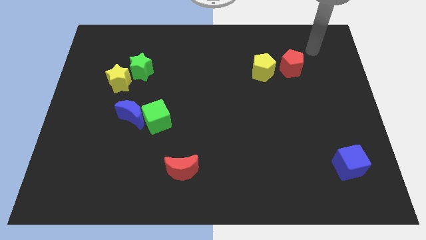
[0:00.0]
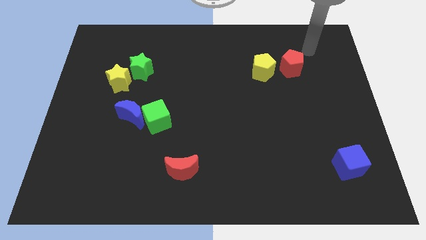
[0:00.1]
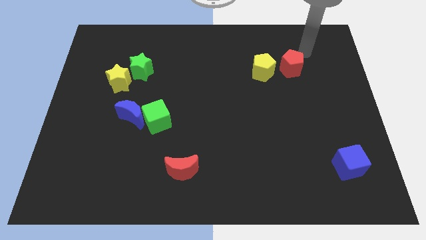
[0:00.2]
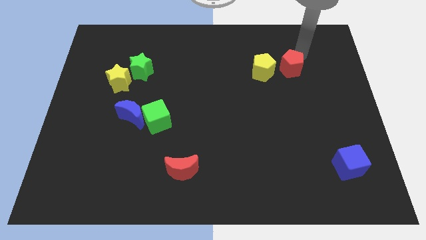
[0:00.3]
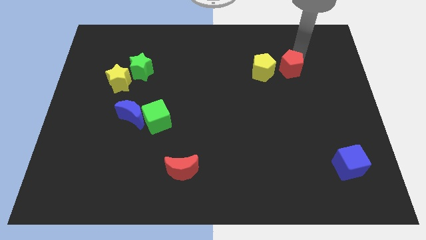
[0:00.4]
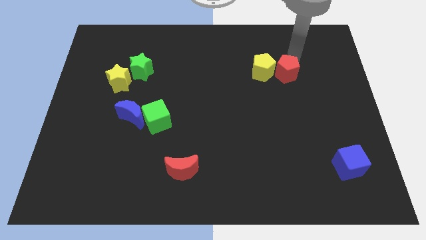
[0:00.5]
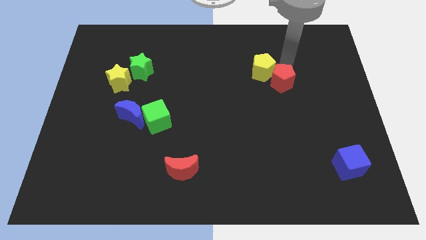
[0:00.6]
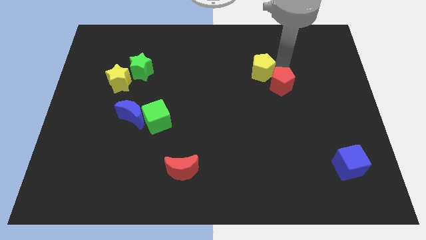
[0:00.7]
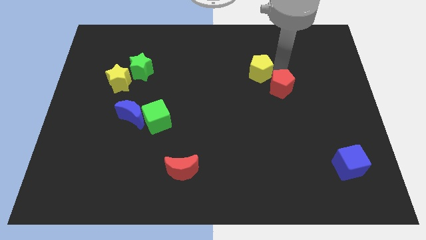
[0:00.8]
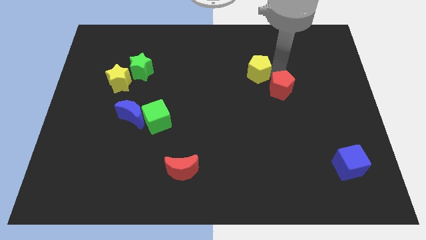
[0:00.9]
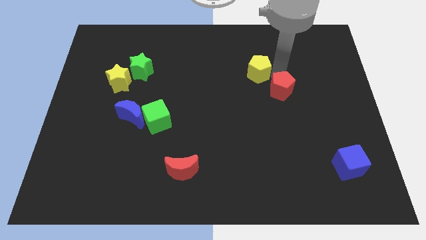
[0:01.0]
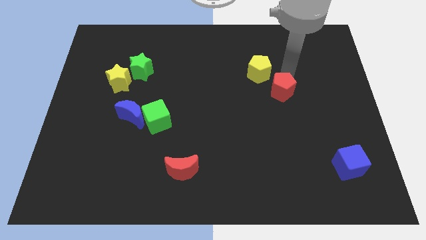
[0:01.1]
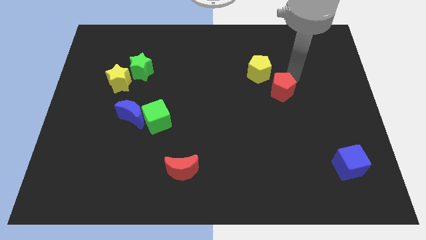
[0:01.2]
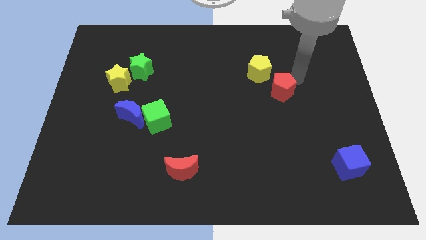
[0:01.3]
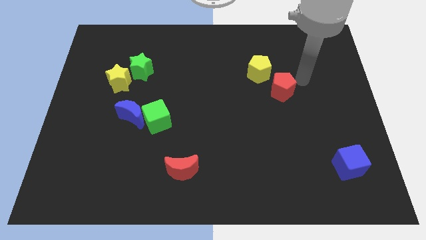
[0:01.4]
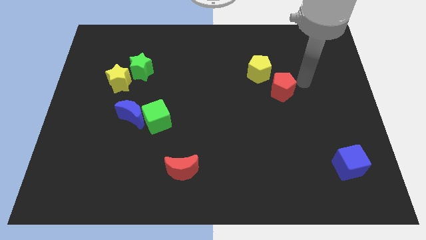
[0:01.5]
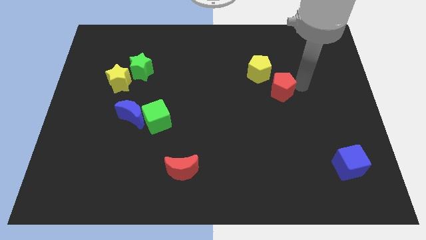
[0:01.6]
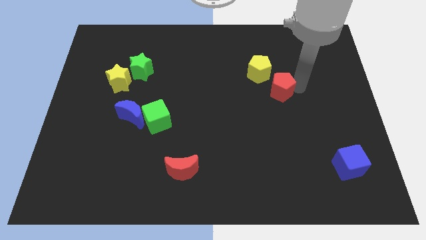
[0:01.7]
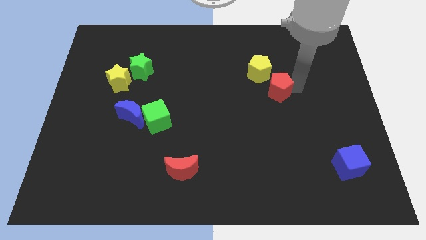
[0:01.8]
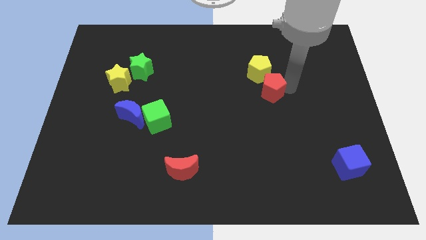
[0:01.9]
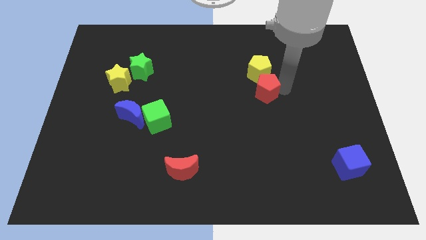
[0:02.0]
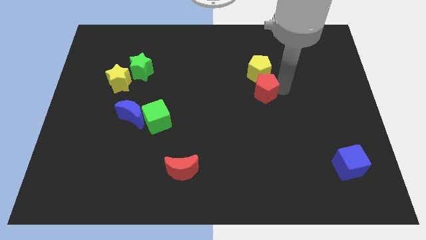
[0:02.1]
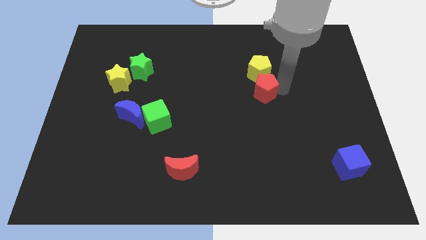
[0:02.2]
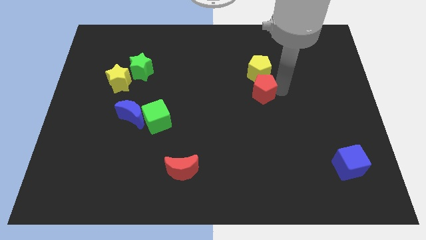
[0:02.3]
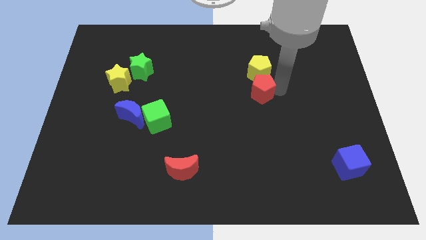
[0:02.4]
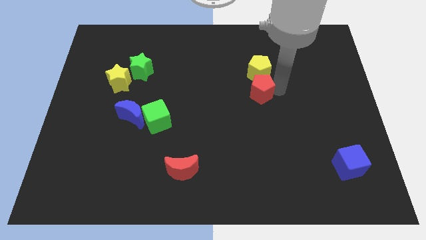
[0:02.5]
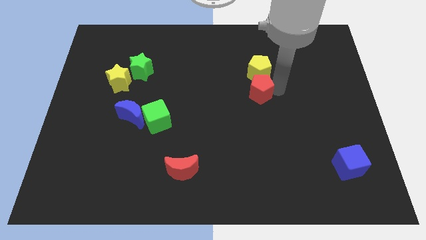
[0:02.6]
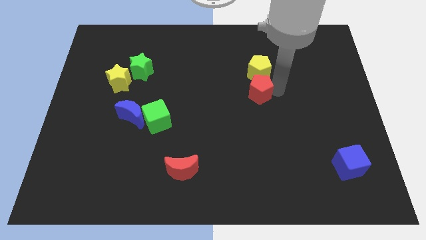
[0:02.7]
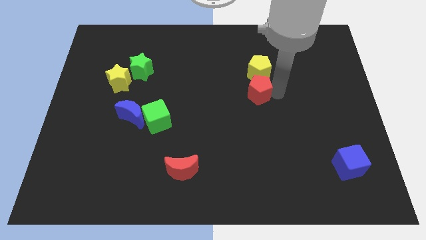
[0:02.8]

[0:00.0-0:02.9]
separate red pentagon from yellow pentagon

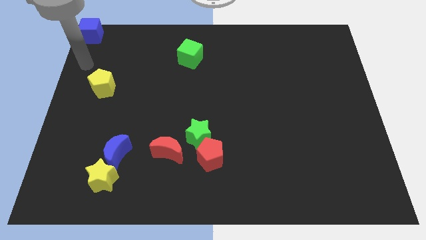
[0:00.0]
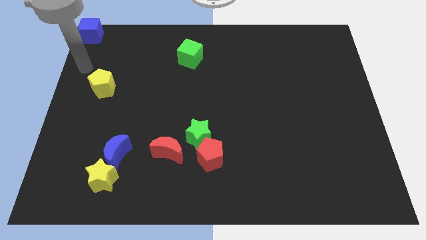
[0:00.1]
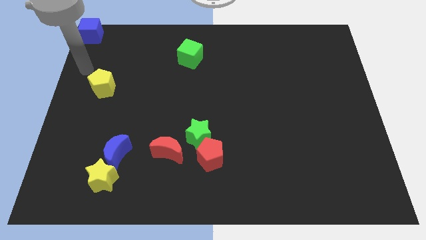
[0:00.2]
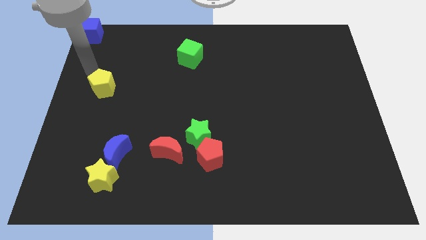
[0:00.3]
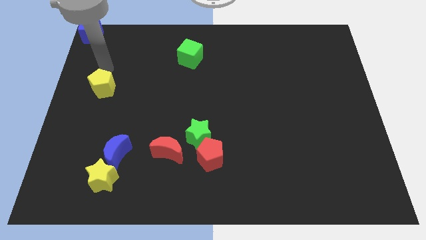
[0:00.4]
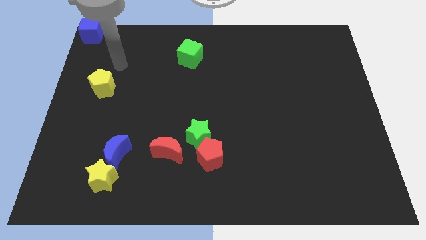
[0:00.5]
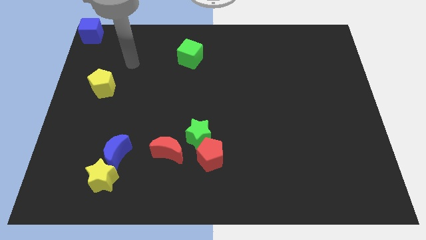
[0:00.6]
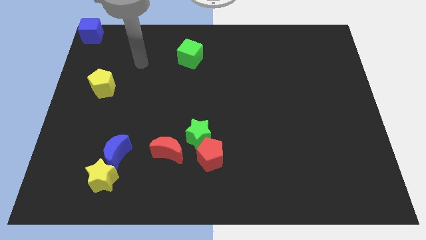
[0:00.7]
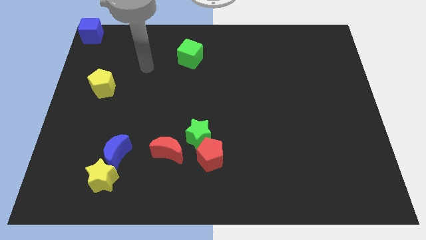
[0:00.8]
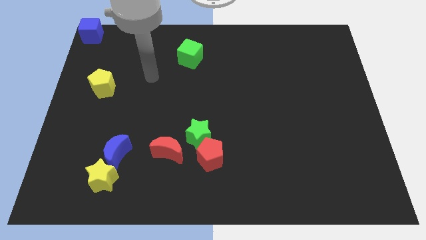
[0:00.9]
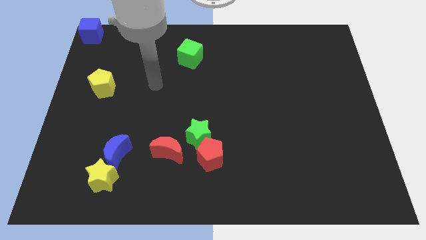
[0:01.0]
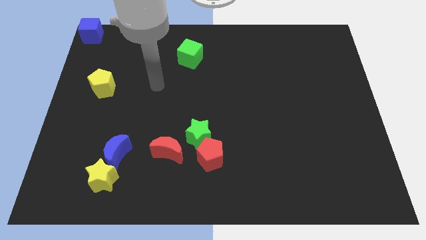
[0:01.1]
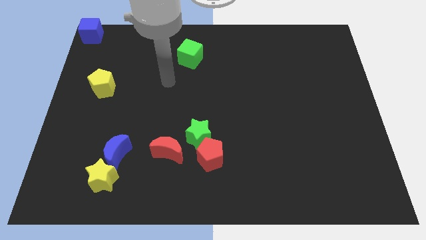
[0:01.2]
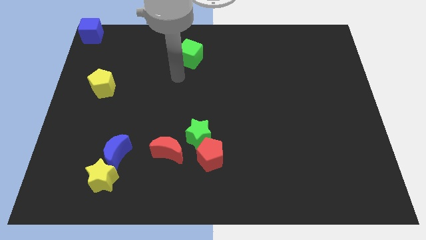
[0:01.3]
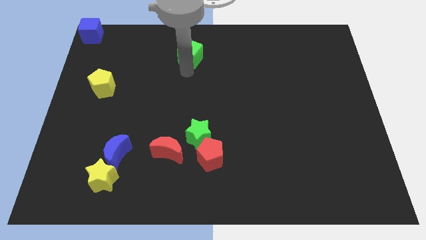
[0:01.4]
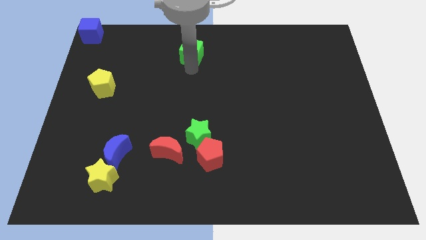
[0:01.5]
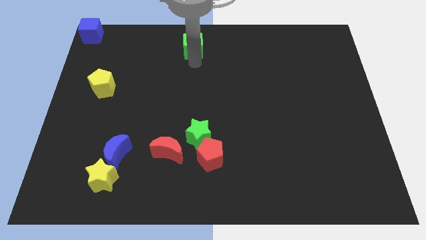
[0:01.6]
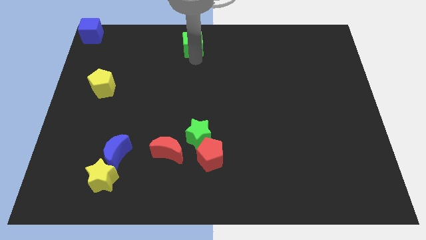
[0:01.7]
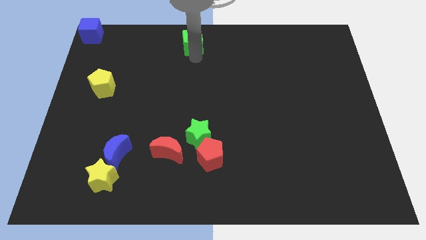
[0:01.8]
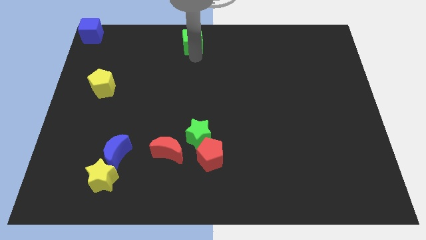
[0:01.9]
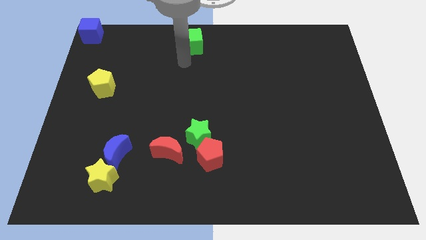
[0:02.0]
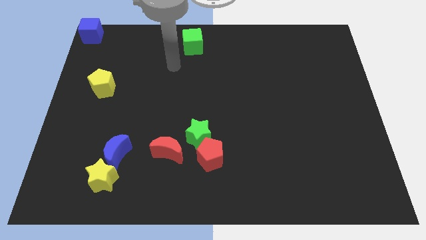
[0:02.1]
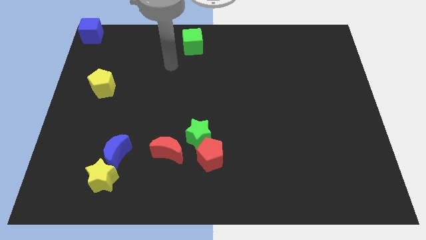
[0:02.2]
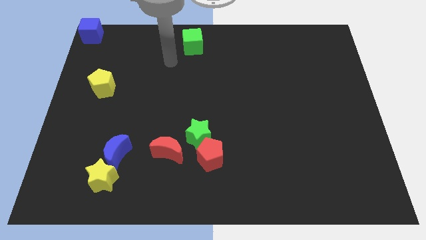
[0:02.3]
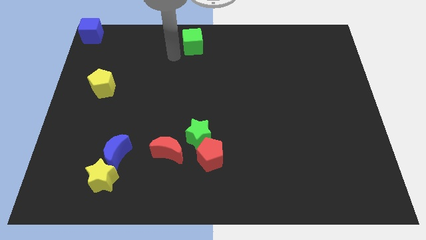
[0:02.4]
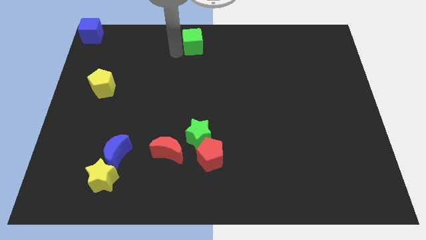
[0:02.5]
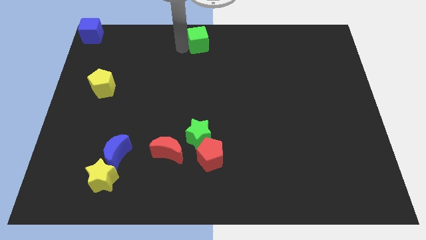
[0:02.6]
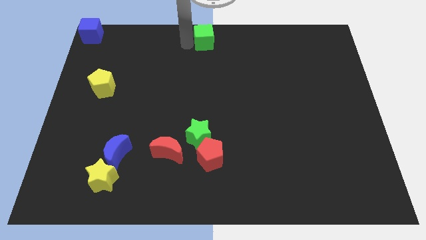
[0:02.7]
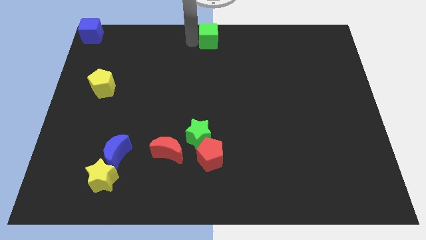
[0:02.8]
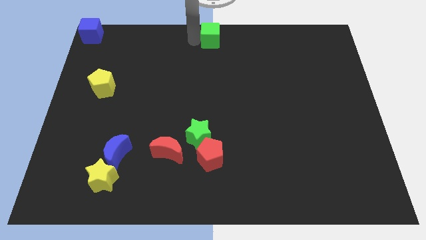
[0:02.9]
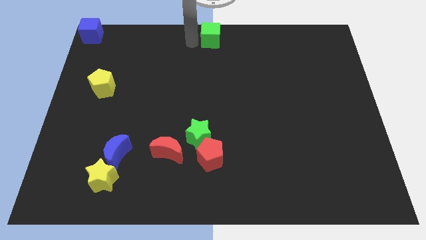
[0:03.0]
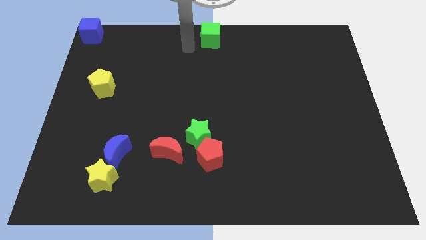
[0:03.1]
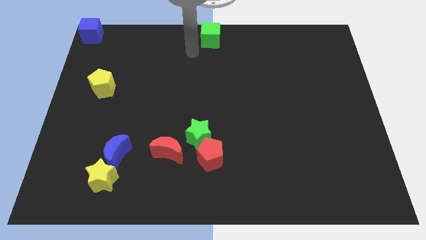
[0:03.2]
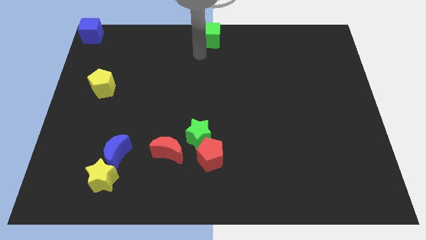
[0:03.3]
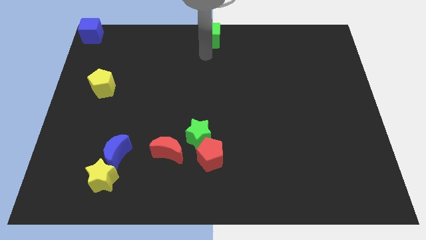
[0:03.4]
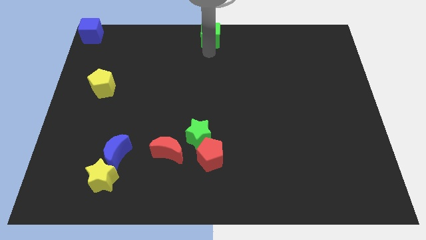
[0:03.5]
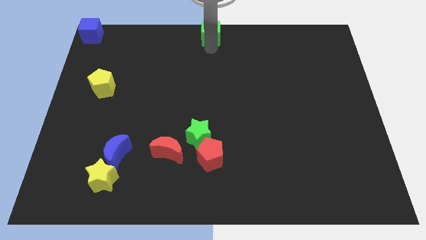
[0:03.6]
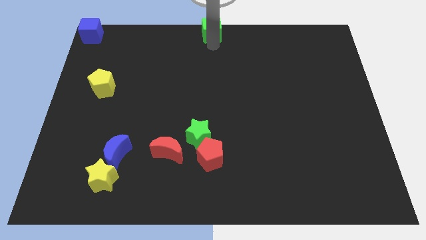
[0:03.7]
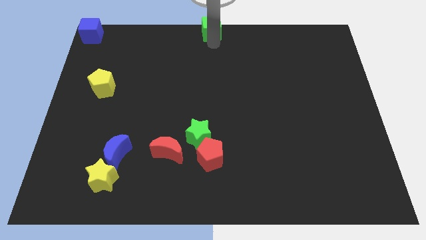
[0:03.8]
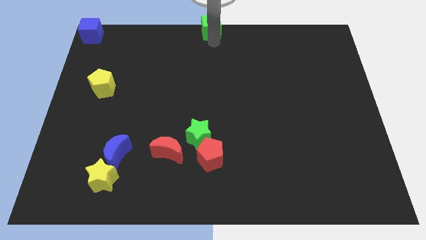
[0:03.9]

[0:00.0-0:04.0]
push the green cube to the top center

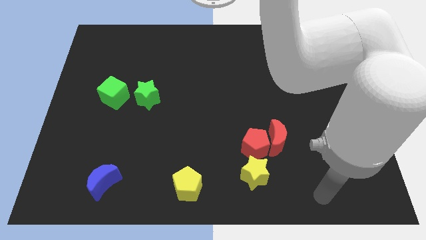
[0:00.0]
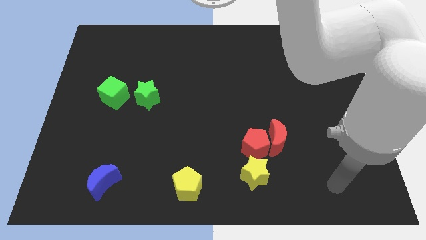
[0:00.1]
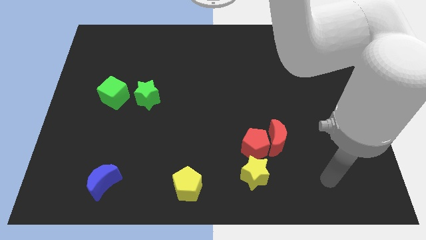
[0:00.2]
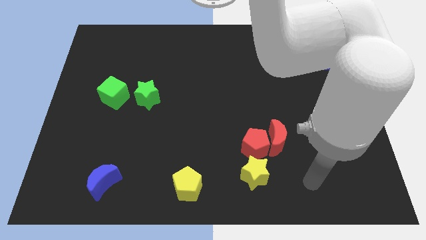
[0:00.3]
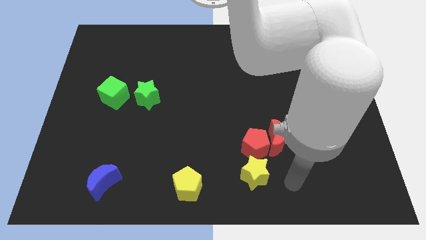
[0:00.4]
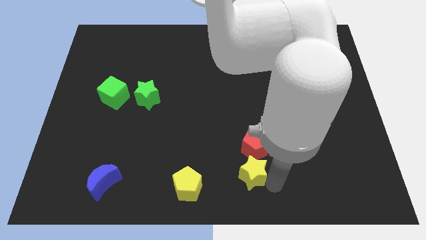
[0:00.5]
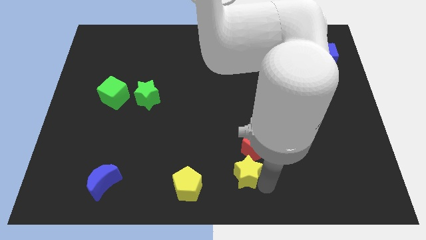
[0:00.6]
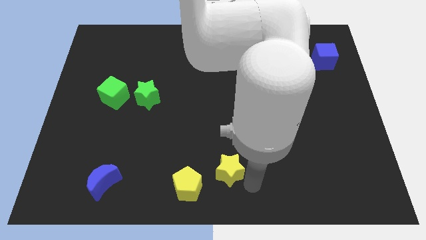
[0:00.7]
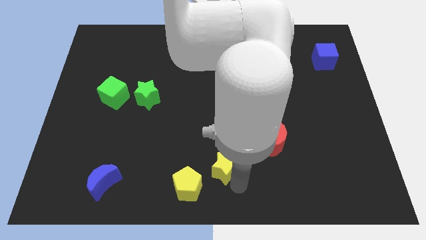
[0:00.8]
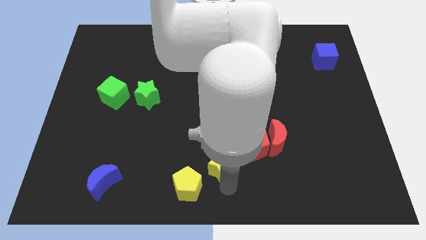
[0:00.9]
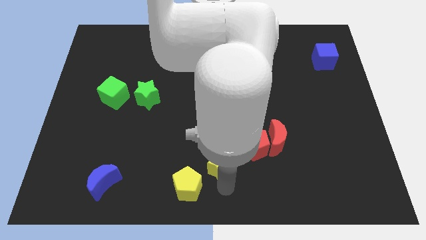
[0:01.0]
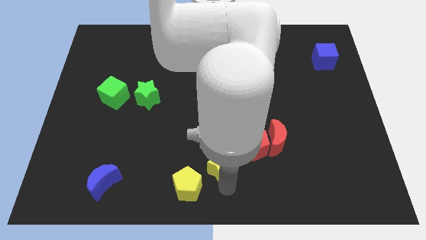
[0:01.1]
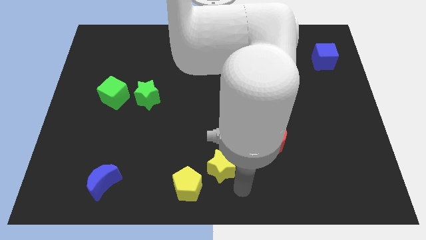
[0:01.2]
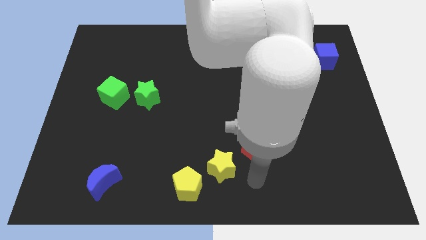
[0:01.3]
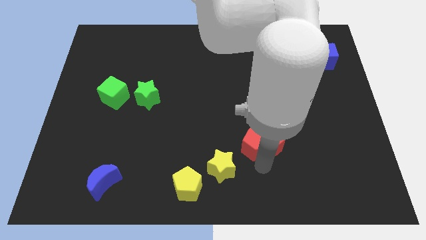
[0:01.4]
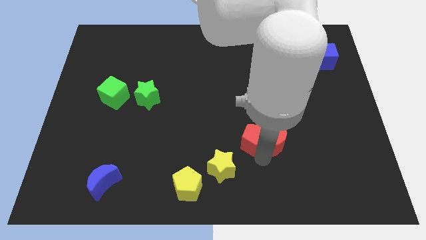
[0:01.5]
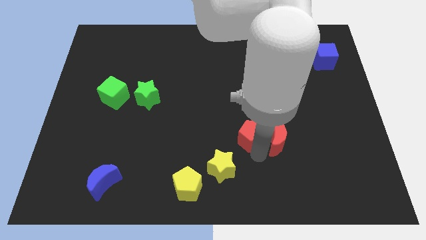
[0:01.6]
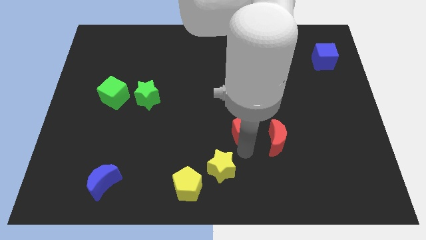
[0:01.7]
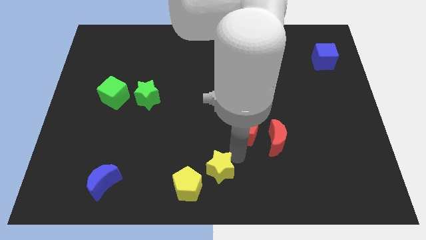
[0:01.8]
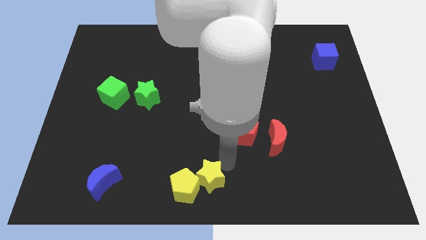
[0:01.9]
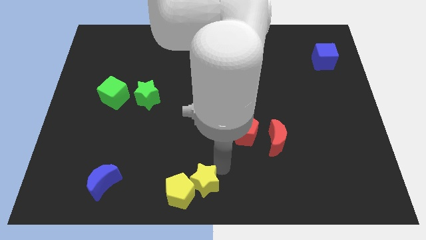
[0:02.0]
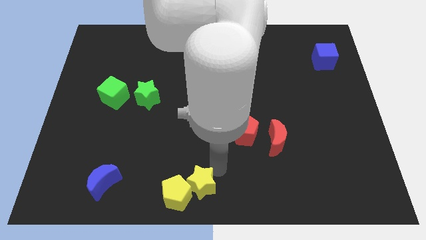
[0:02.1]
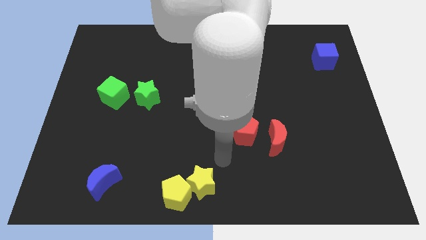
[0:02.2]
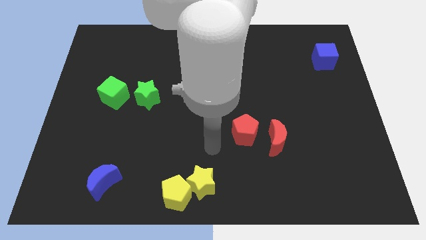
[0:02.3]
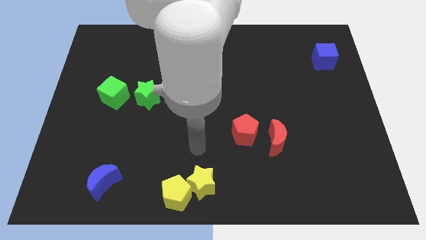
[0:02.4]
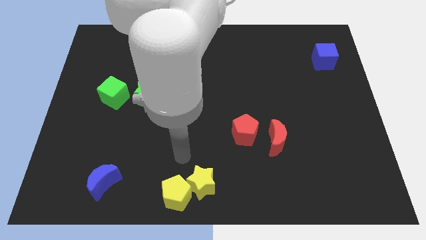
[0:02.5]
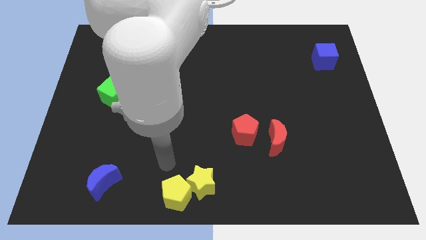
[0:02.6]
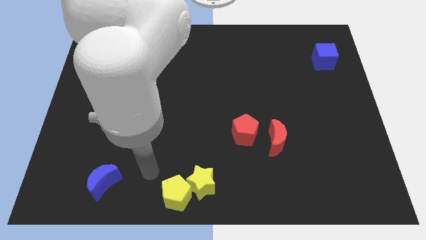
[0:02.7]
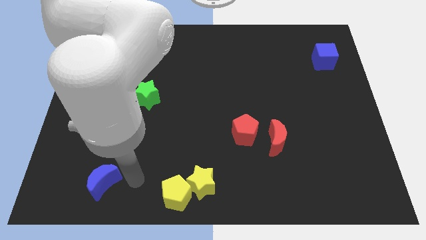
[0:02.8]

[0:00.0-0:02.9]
push yellow star in to yellow pentagon
